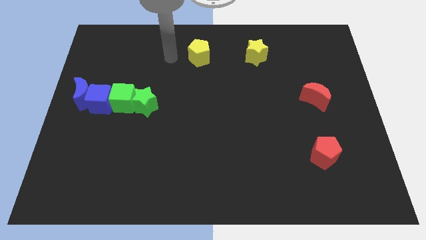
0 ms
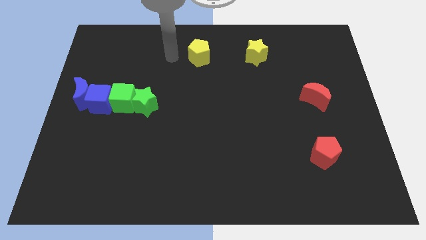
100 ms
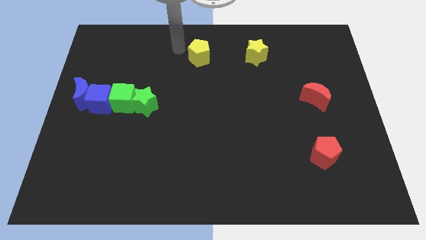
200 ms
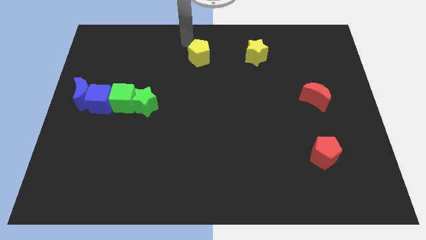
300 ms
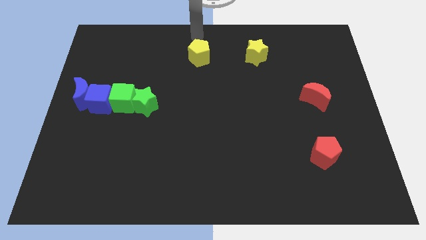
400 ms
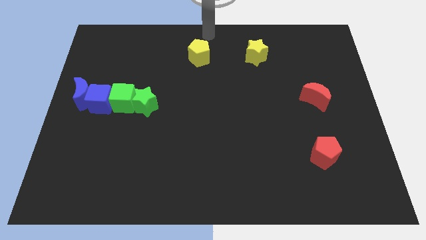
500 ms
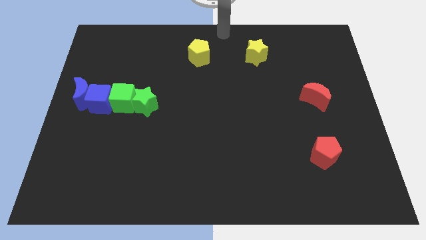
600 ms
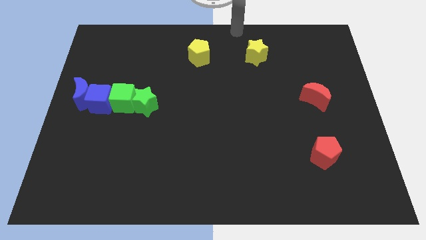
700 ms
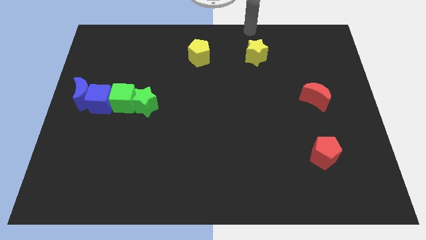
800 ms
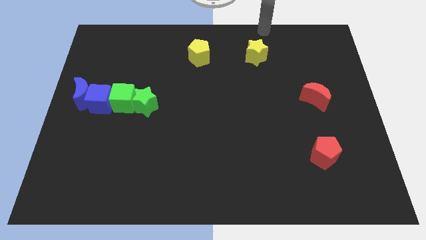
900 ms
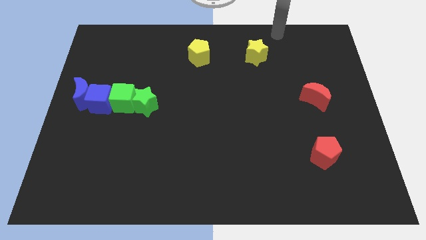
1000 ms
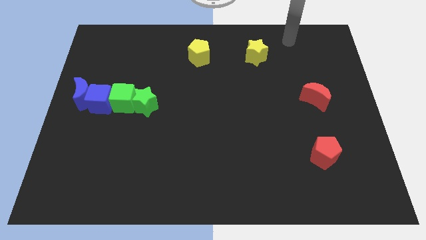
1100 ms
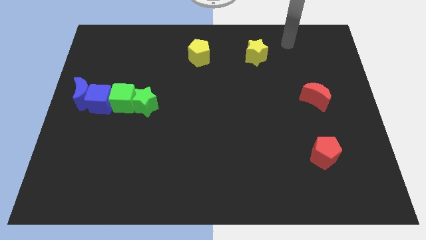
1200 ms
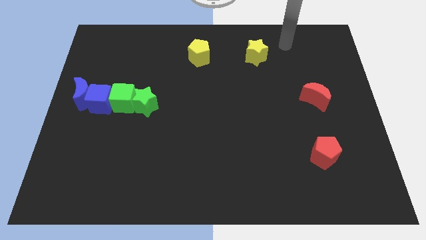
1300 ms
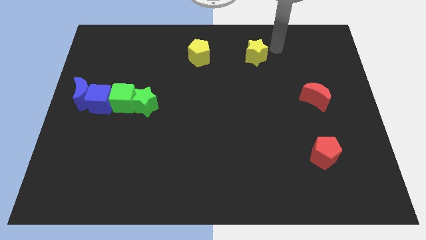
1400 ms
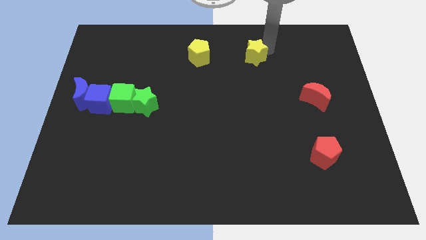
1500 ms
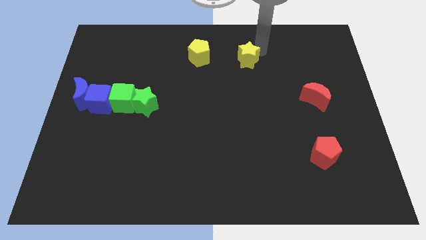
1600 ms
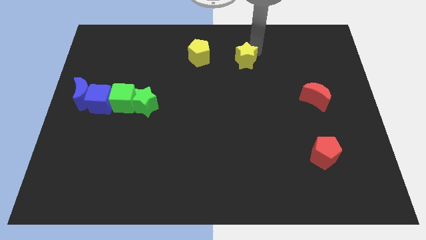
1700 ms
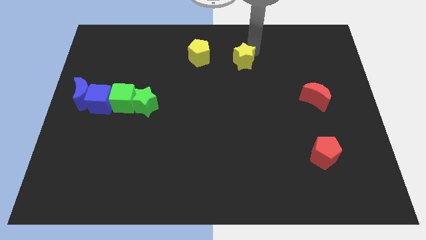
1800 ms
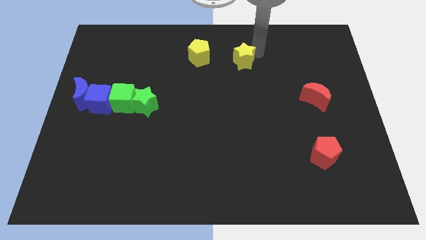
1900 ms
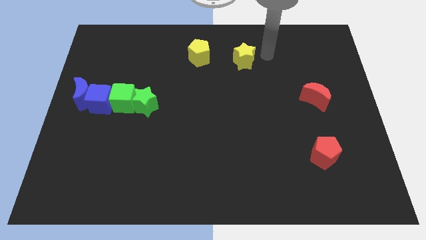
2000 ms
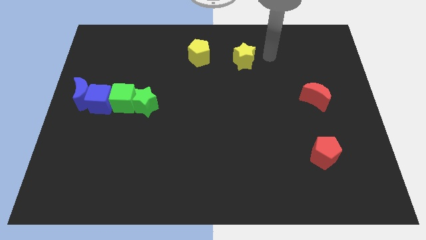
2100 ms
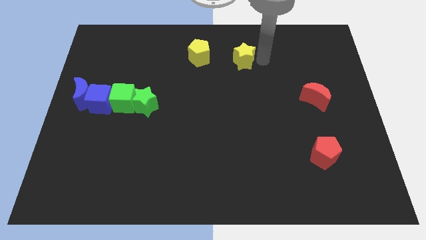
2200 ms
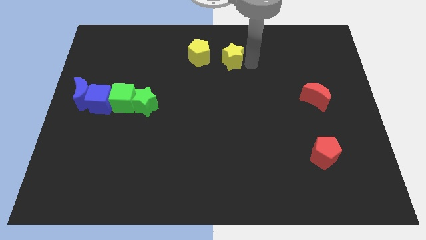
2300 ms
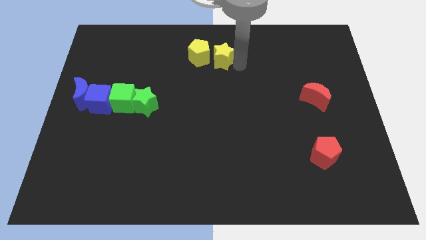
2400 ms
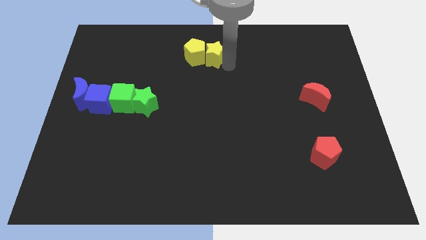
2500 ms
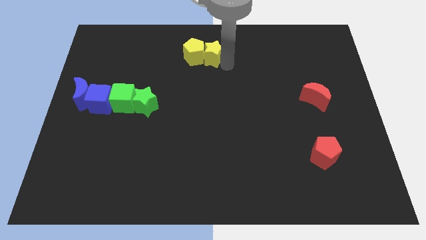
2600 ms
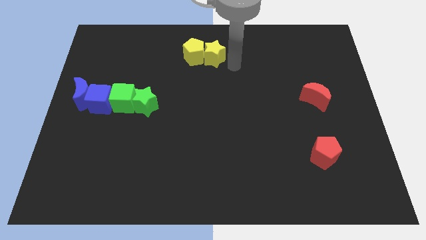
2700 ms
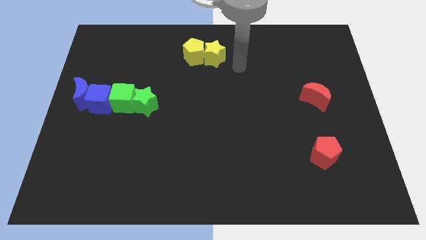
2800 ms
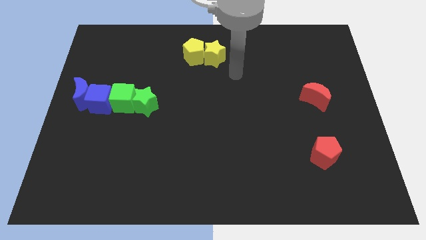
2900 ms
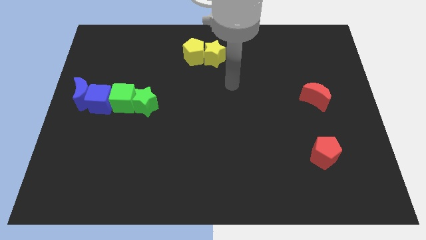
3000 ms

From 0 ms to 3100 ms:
push yellow star into yellow pentagon

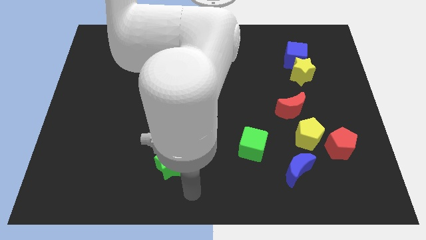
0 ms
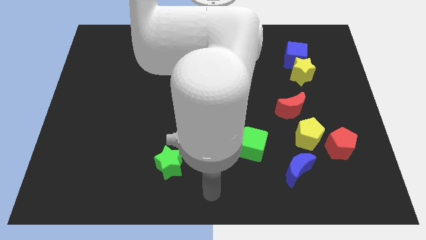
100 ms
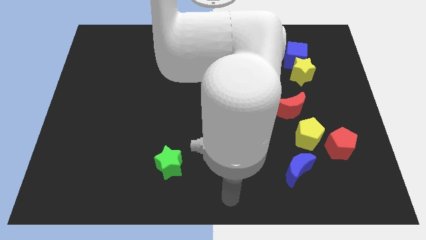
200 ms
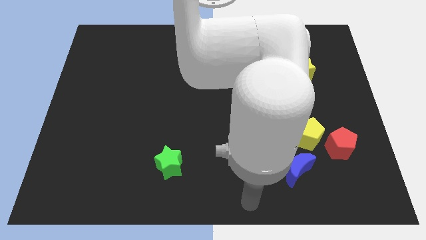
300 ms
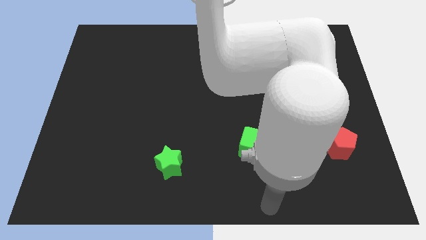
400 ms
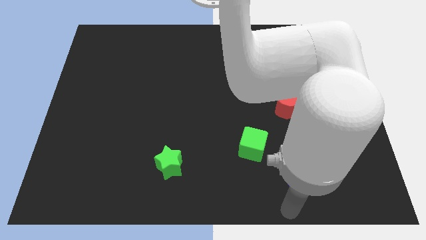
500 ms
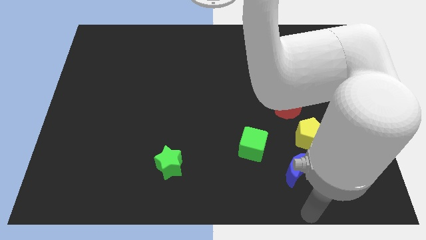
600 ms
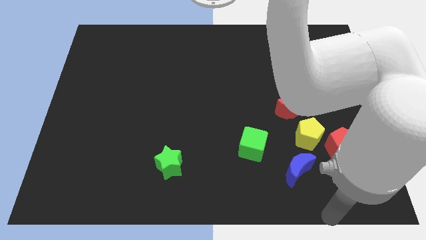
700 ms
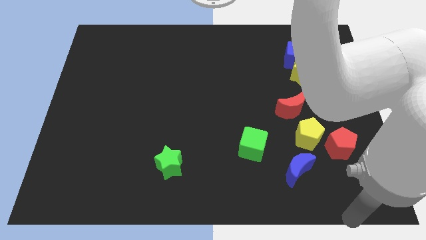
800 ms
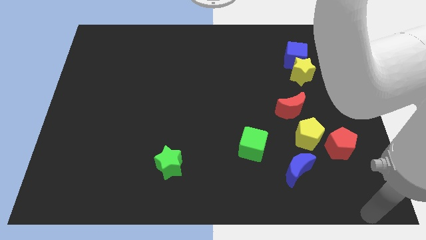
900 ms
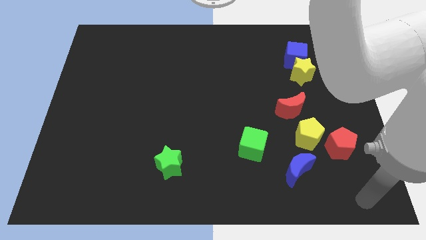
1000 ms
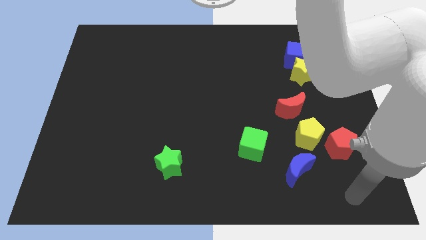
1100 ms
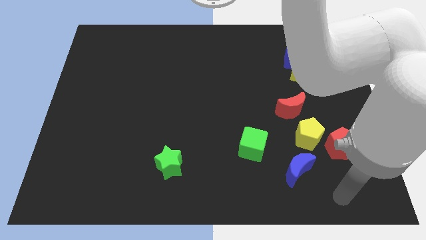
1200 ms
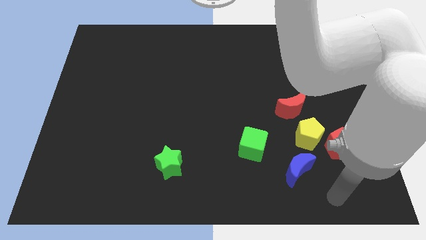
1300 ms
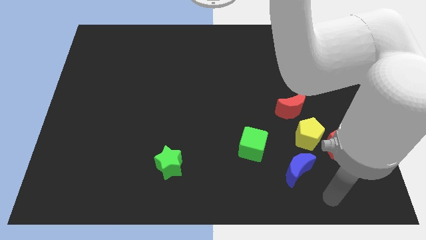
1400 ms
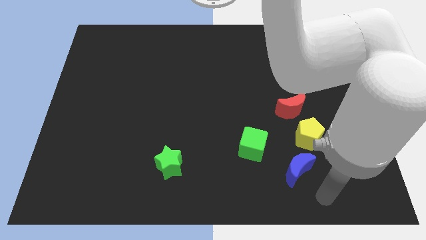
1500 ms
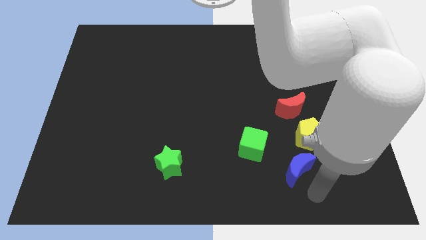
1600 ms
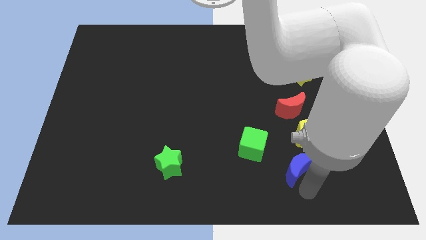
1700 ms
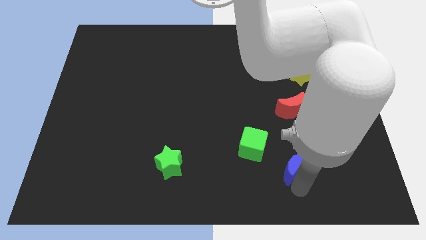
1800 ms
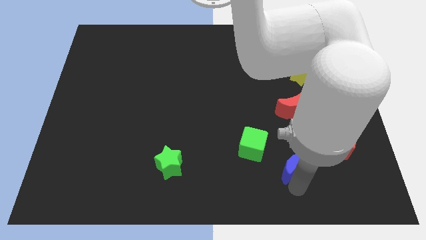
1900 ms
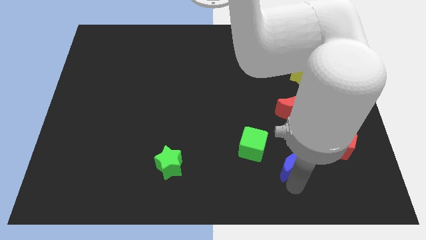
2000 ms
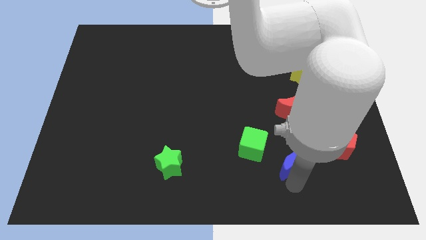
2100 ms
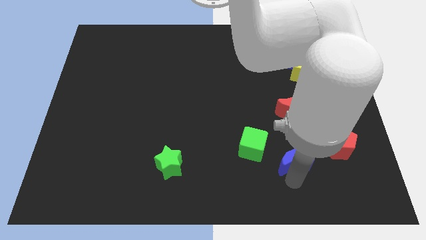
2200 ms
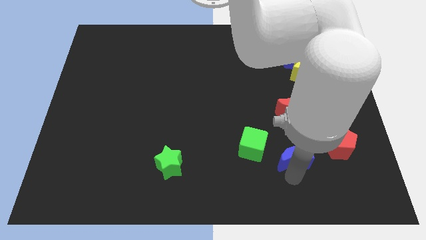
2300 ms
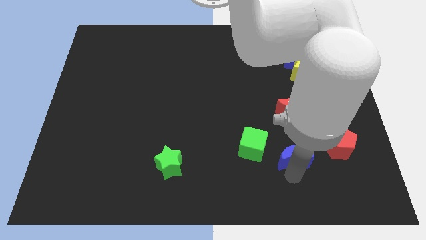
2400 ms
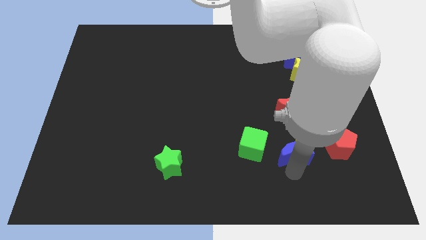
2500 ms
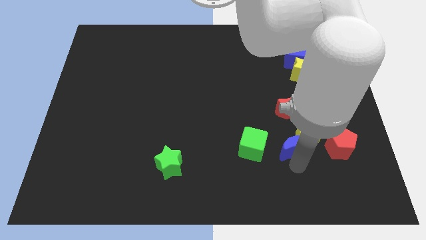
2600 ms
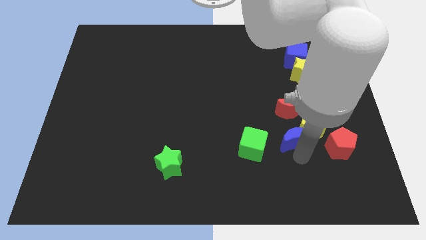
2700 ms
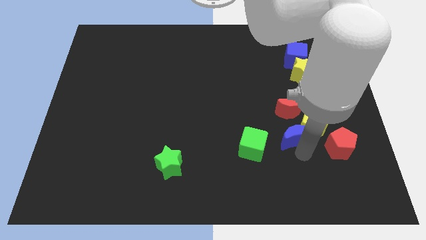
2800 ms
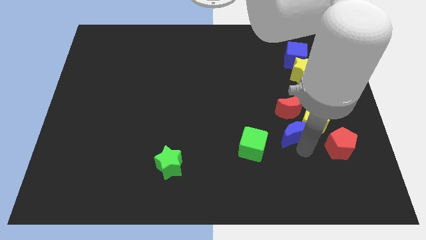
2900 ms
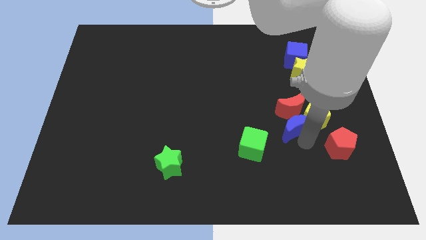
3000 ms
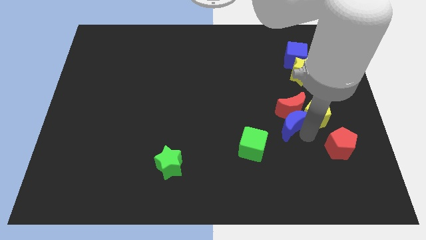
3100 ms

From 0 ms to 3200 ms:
push the blue crescent into the yellow pentagon

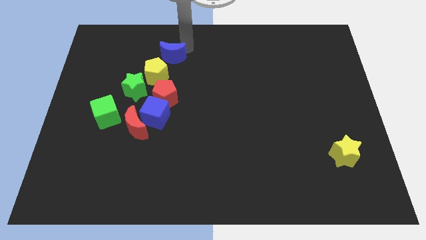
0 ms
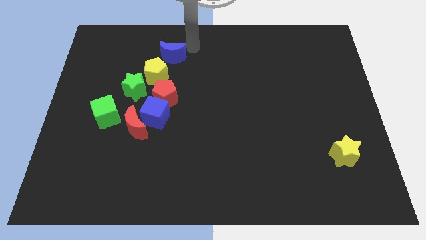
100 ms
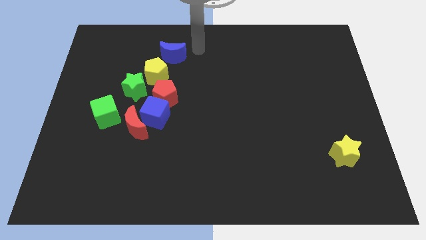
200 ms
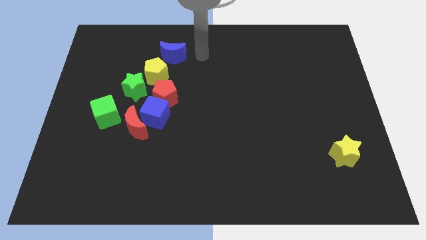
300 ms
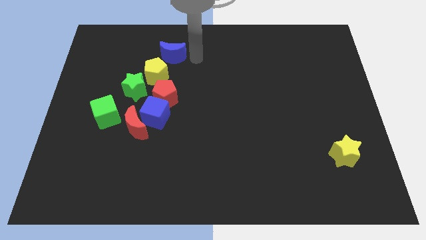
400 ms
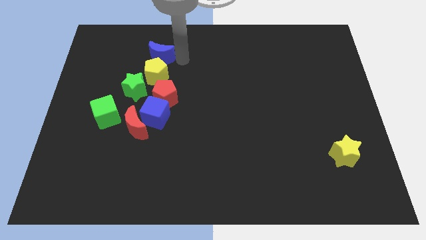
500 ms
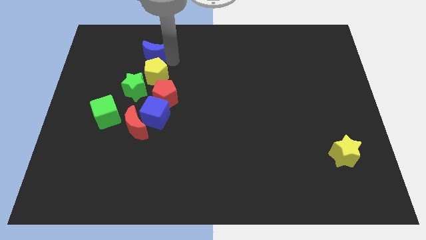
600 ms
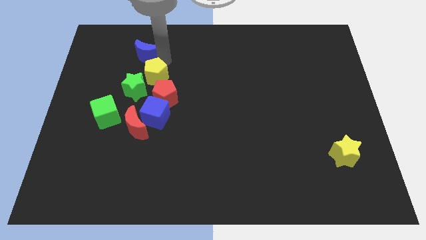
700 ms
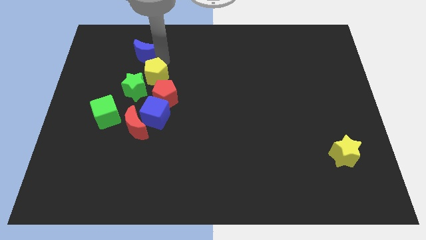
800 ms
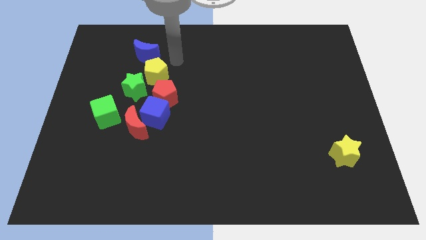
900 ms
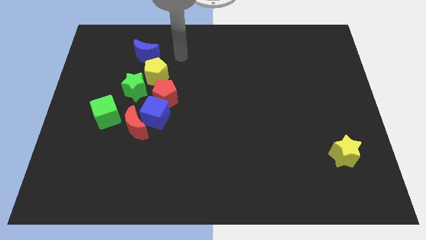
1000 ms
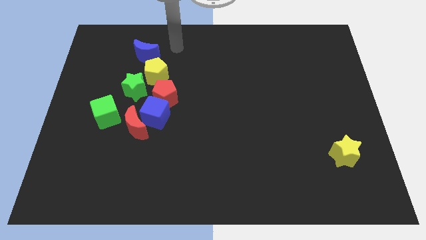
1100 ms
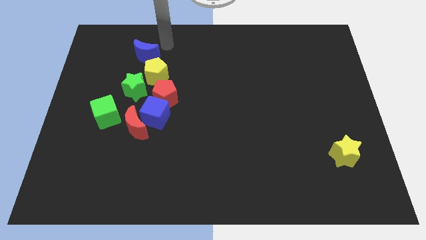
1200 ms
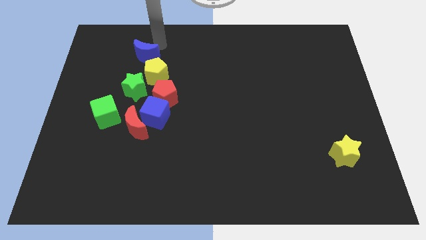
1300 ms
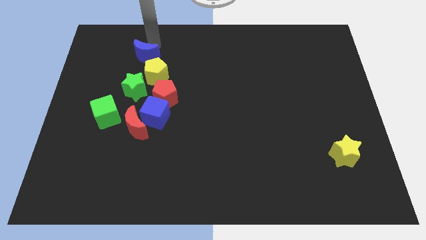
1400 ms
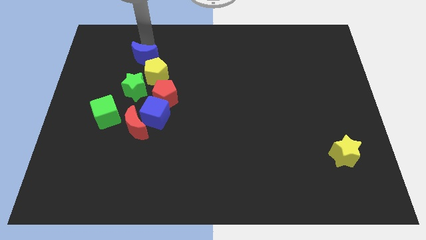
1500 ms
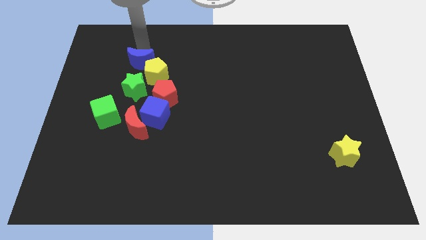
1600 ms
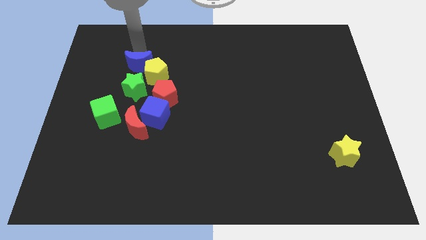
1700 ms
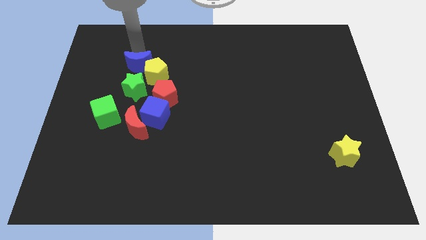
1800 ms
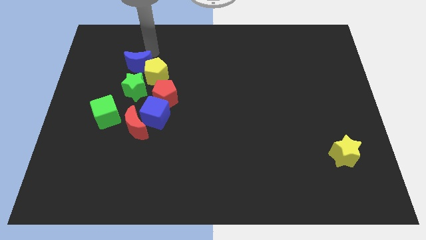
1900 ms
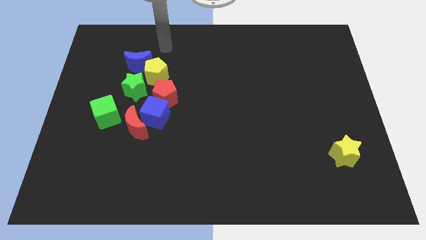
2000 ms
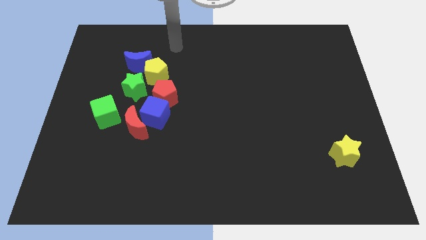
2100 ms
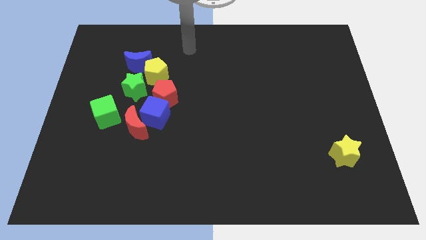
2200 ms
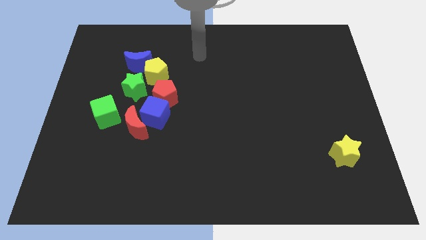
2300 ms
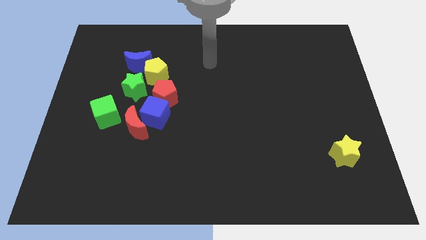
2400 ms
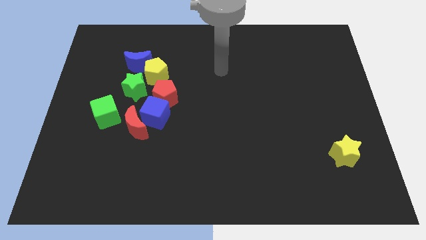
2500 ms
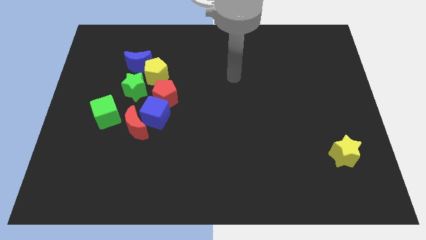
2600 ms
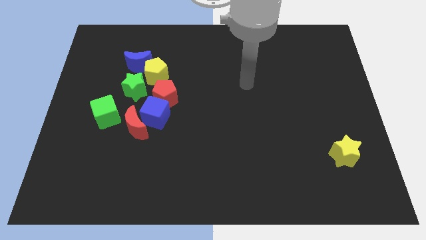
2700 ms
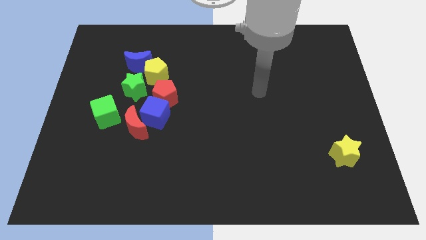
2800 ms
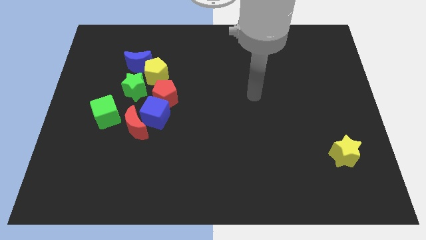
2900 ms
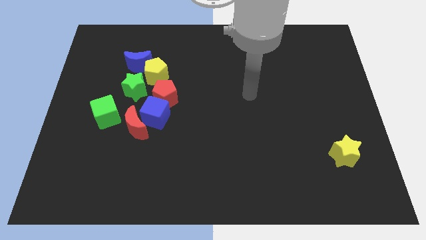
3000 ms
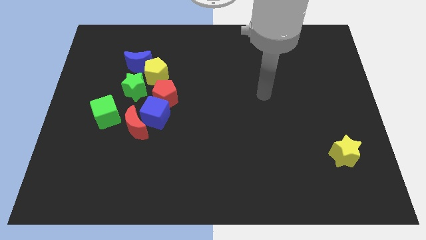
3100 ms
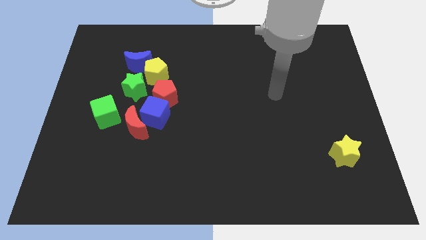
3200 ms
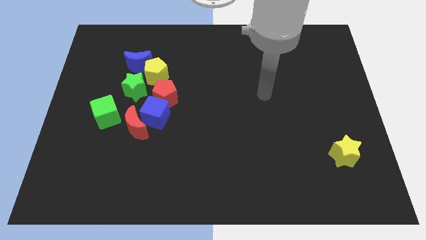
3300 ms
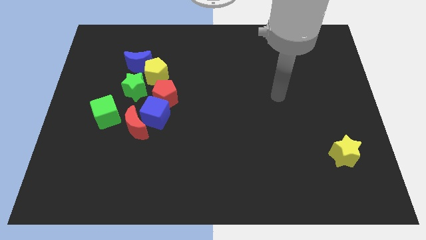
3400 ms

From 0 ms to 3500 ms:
place blue moon to the top of green star
